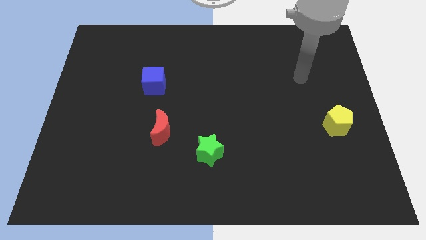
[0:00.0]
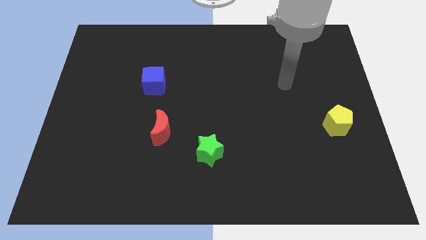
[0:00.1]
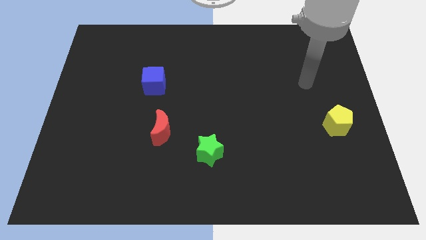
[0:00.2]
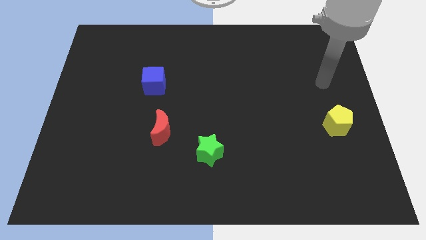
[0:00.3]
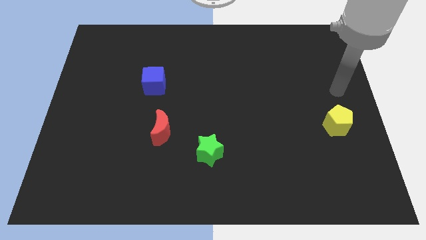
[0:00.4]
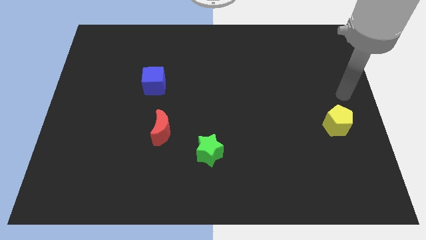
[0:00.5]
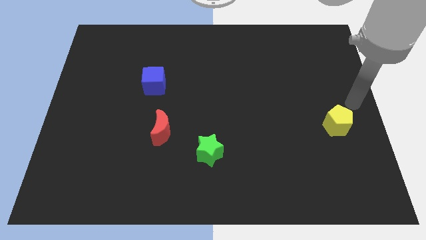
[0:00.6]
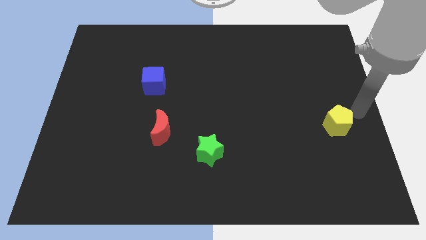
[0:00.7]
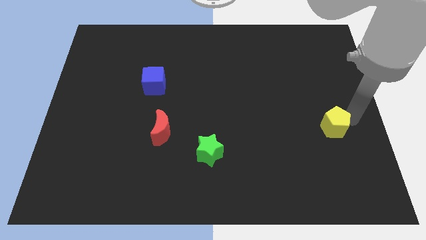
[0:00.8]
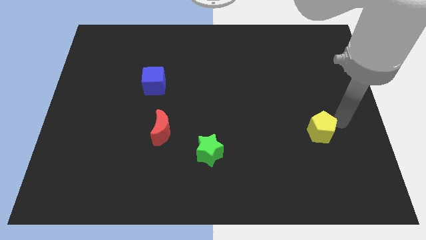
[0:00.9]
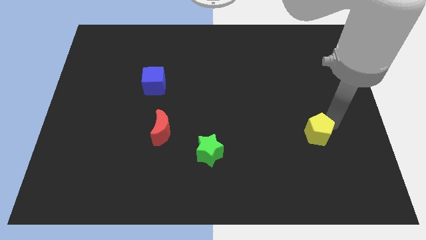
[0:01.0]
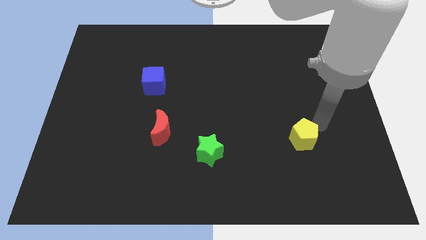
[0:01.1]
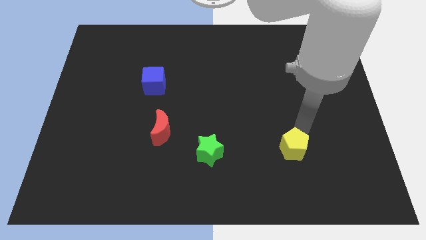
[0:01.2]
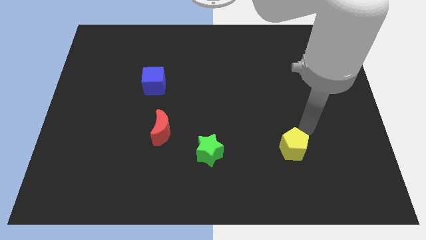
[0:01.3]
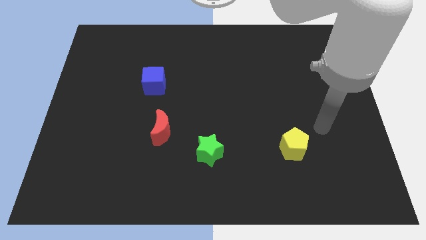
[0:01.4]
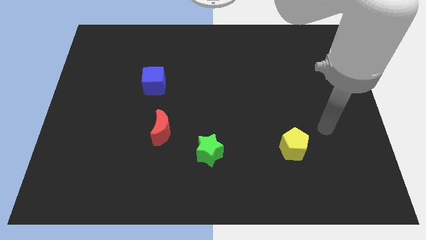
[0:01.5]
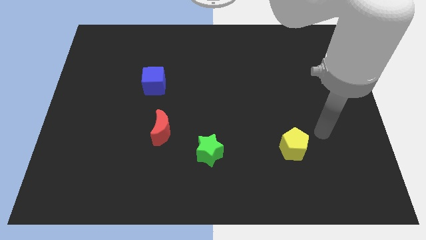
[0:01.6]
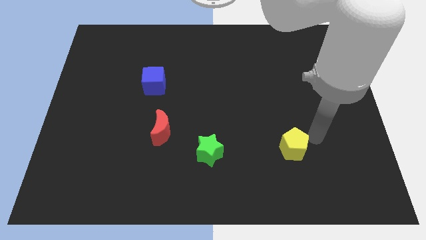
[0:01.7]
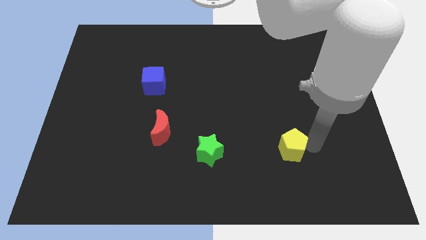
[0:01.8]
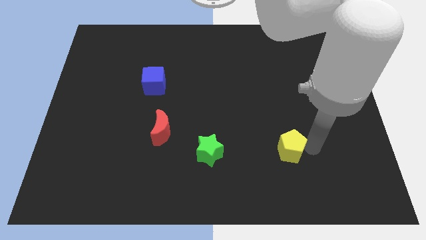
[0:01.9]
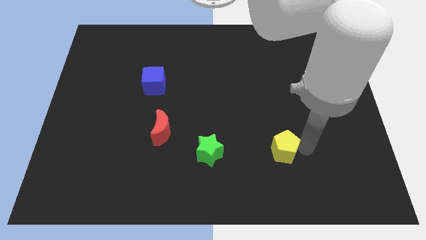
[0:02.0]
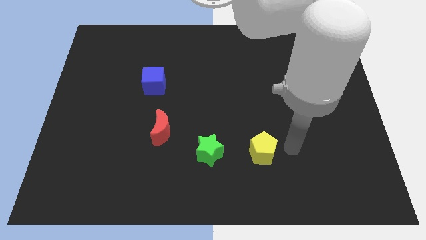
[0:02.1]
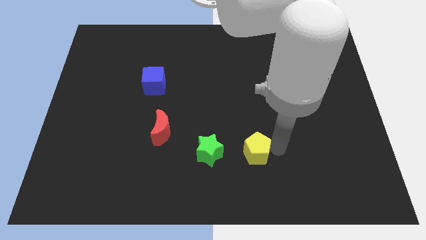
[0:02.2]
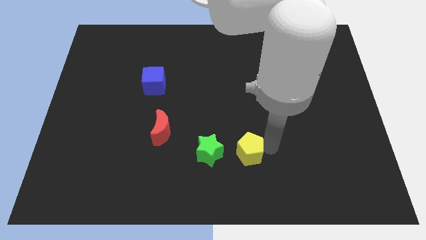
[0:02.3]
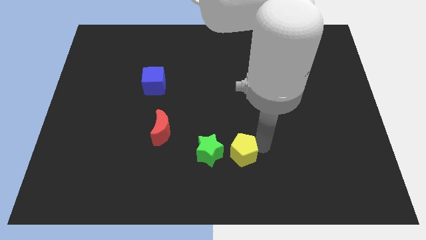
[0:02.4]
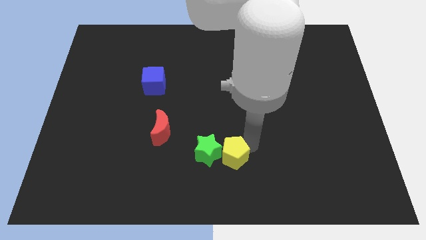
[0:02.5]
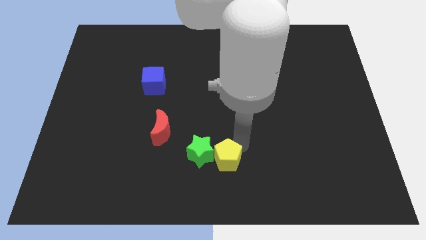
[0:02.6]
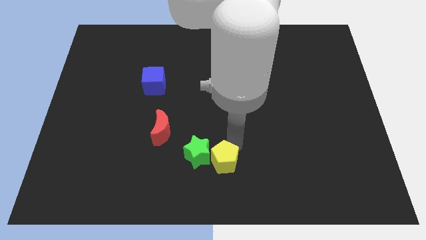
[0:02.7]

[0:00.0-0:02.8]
slide the pentagon next to the star

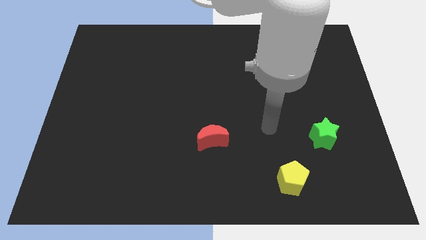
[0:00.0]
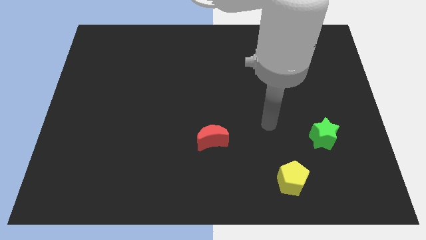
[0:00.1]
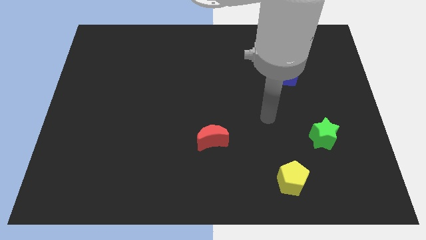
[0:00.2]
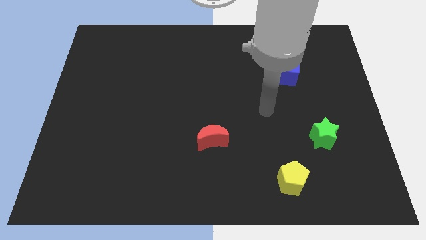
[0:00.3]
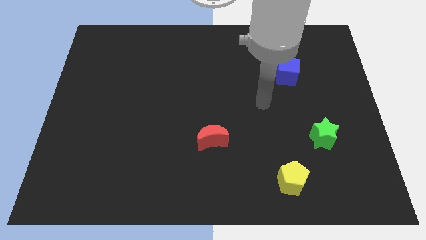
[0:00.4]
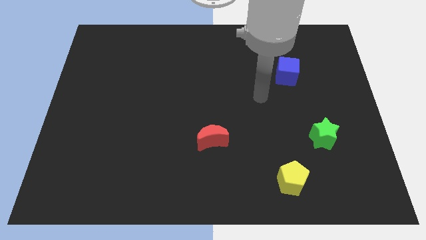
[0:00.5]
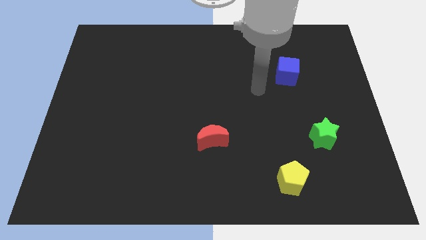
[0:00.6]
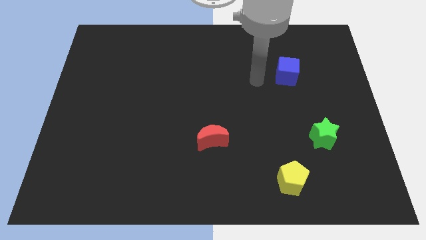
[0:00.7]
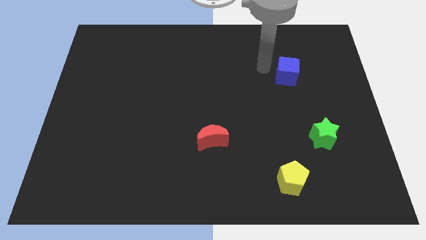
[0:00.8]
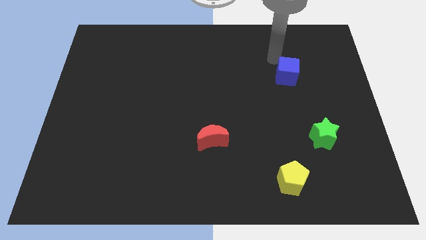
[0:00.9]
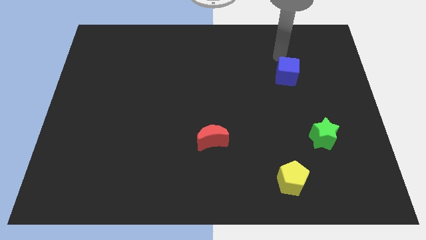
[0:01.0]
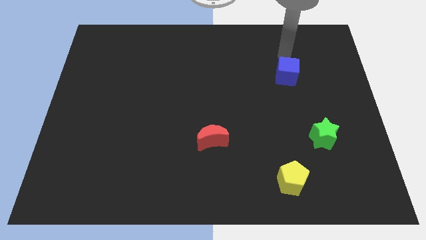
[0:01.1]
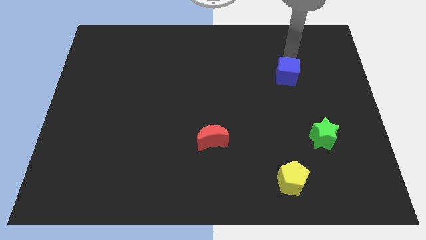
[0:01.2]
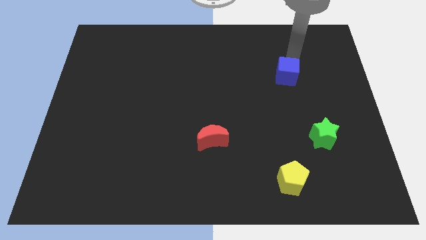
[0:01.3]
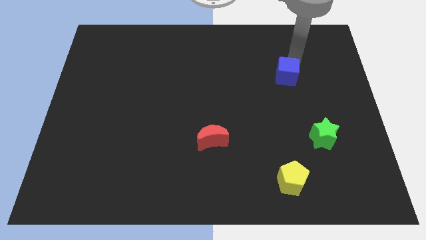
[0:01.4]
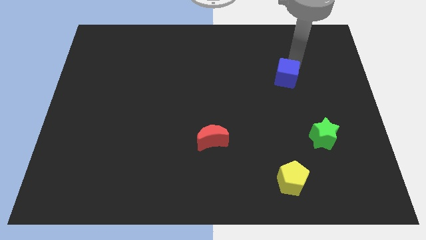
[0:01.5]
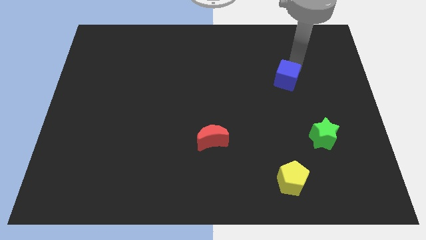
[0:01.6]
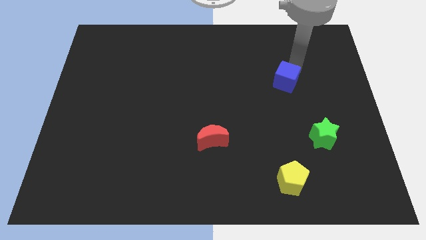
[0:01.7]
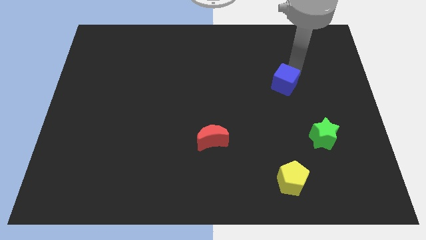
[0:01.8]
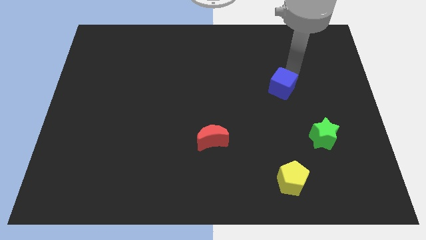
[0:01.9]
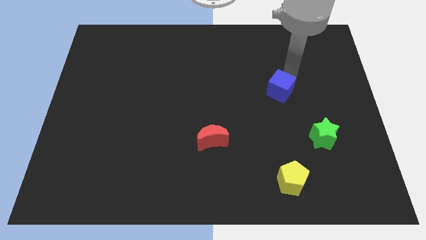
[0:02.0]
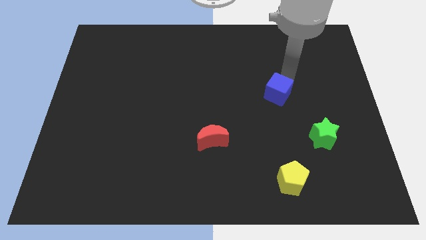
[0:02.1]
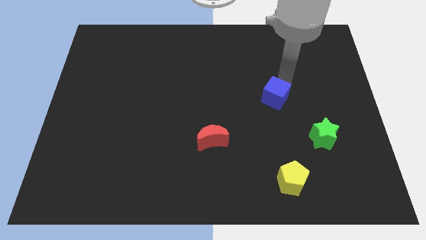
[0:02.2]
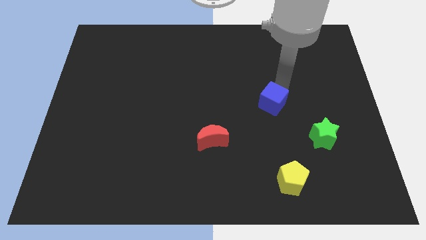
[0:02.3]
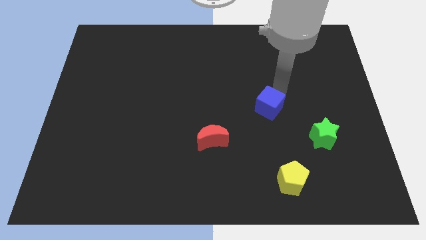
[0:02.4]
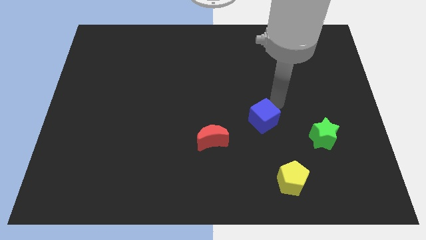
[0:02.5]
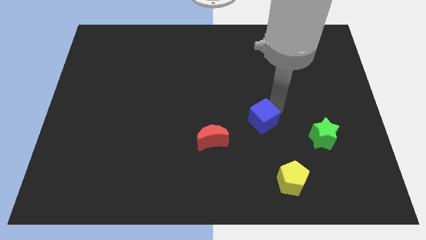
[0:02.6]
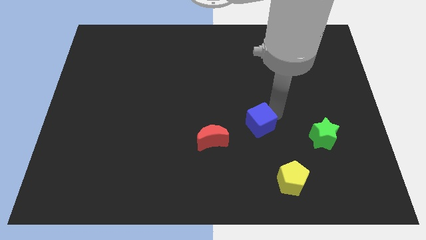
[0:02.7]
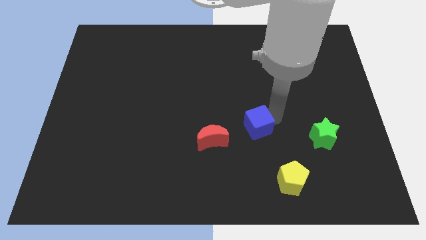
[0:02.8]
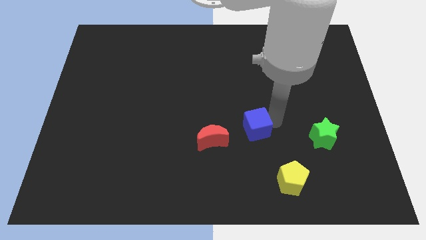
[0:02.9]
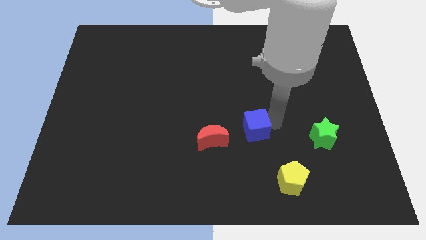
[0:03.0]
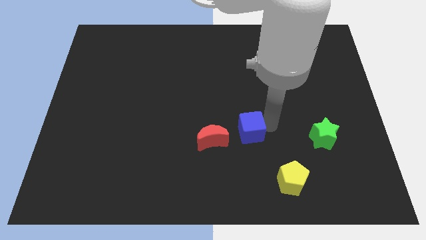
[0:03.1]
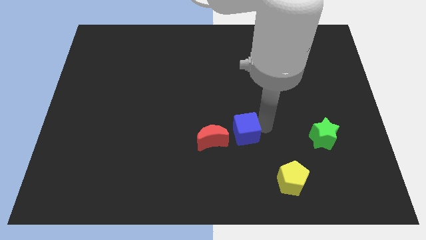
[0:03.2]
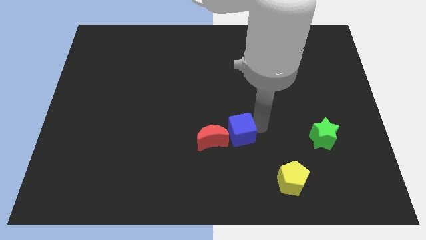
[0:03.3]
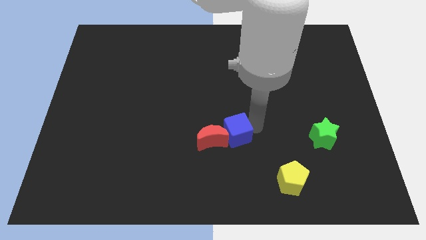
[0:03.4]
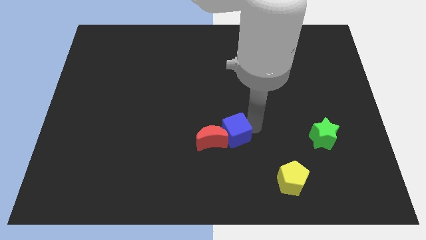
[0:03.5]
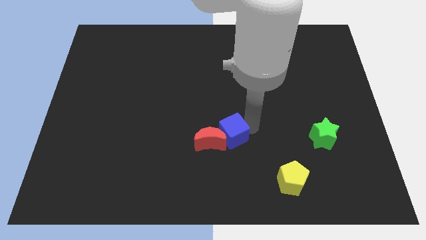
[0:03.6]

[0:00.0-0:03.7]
slide the blue block close to the red block

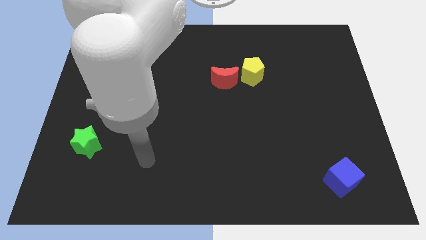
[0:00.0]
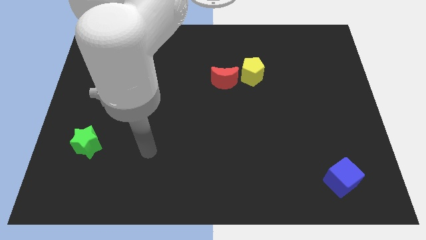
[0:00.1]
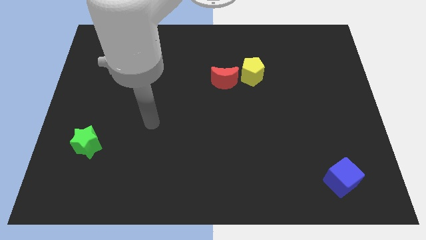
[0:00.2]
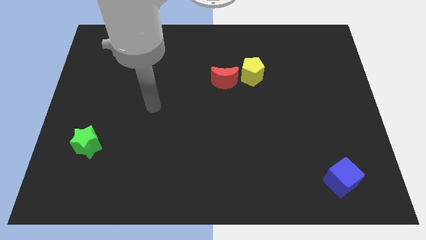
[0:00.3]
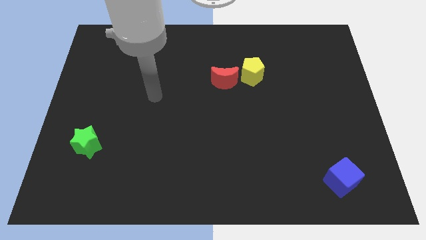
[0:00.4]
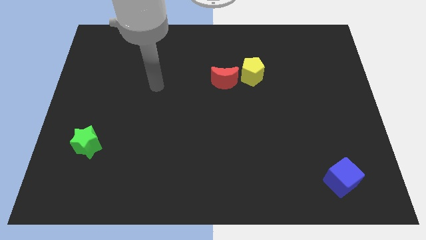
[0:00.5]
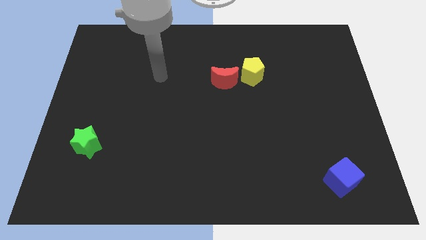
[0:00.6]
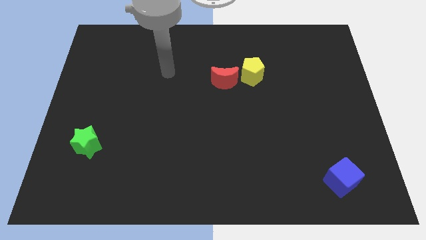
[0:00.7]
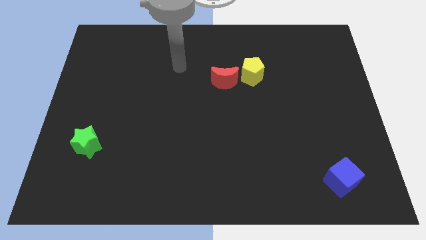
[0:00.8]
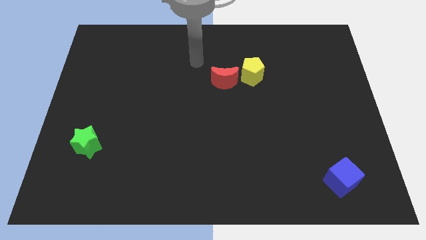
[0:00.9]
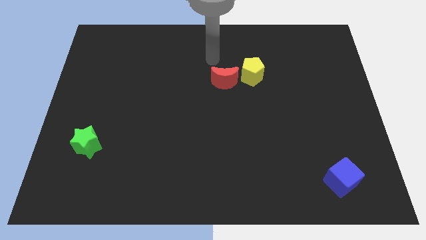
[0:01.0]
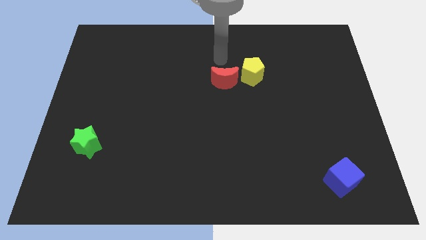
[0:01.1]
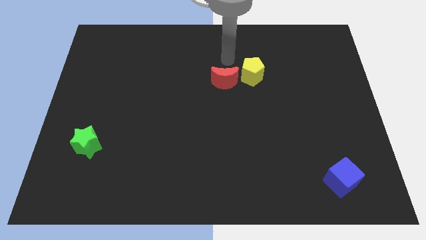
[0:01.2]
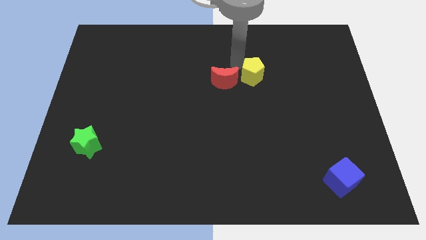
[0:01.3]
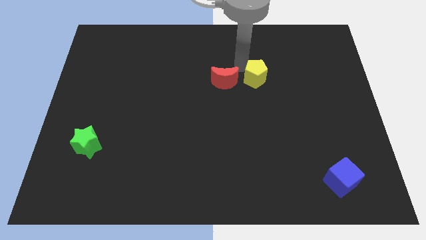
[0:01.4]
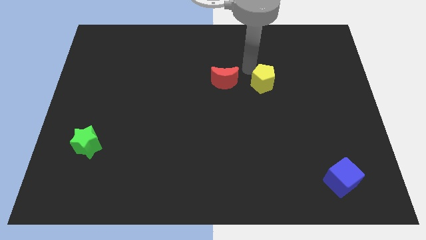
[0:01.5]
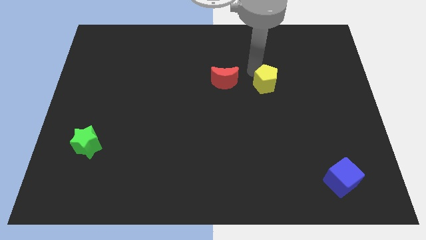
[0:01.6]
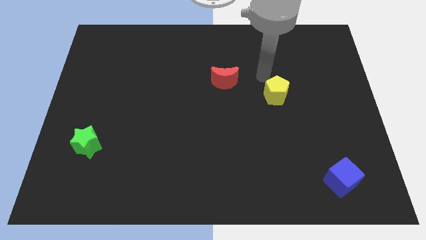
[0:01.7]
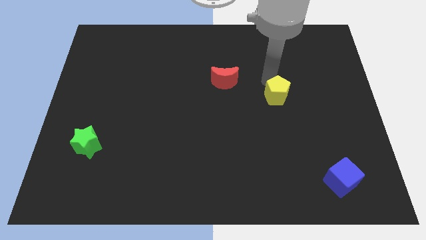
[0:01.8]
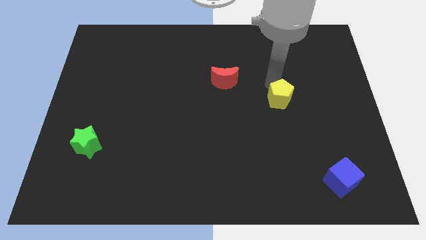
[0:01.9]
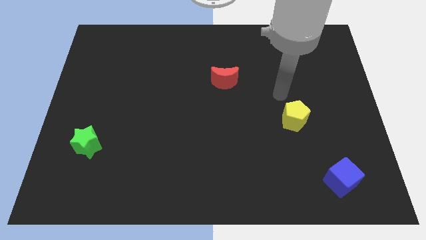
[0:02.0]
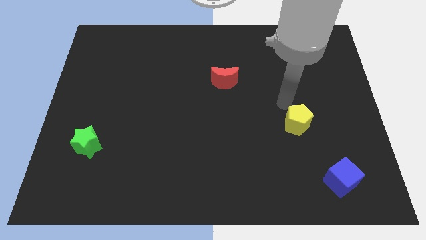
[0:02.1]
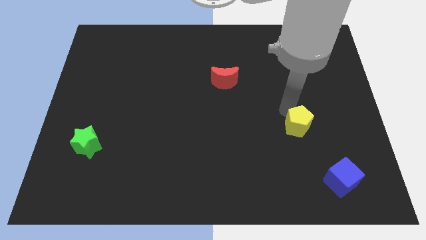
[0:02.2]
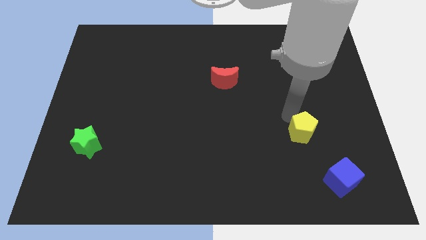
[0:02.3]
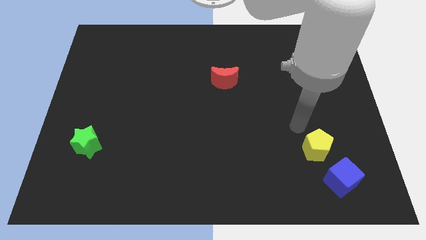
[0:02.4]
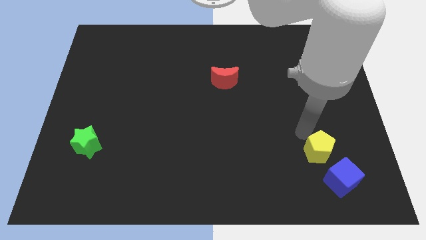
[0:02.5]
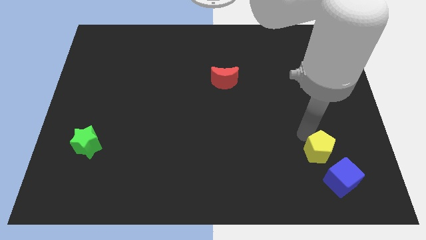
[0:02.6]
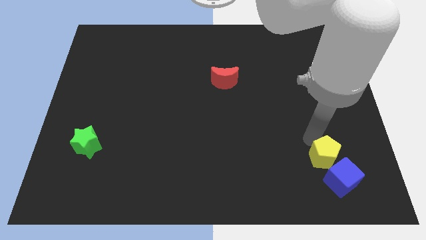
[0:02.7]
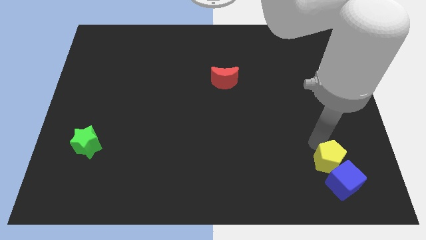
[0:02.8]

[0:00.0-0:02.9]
slide the yellow block towards the blue block
